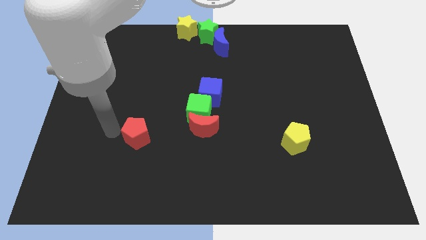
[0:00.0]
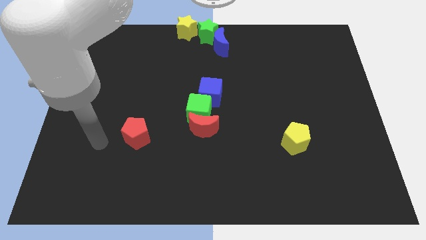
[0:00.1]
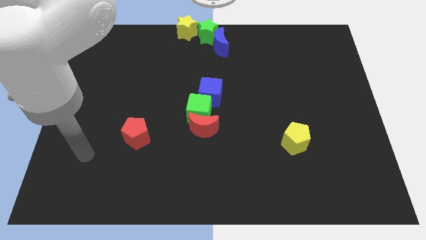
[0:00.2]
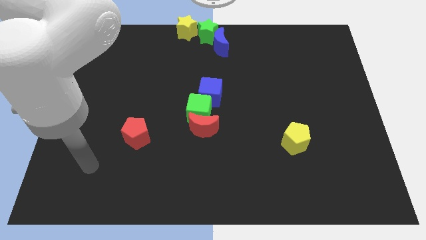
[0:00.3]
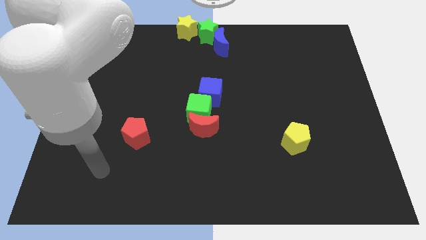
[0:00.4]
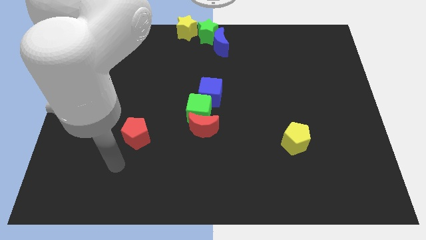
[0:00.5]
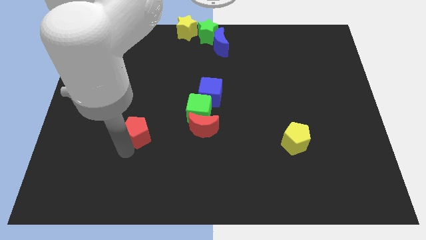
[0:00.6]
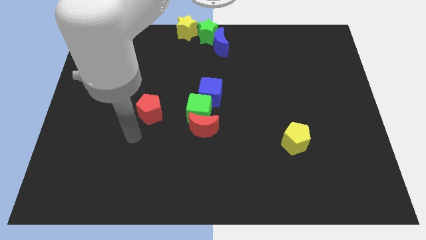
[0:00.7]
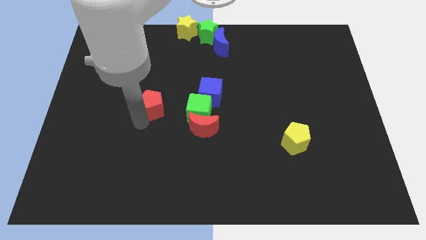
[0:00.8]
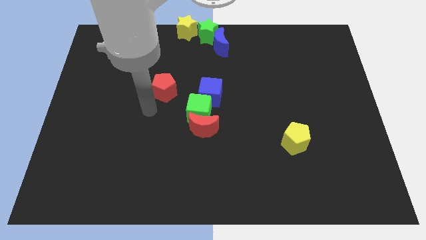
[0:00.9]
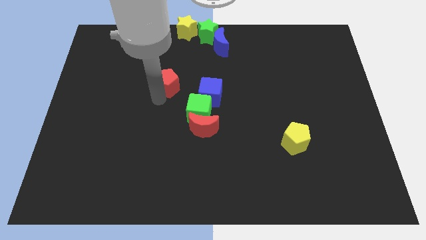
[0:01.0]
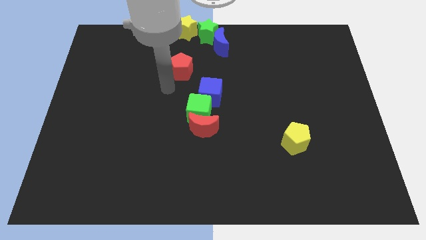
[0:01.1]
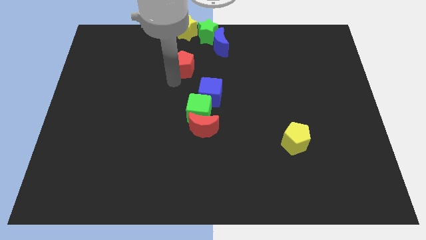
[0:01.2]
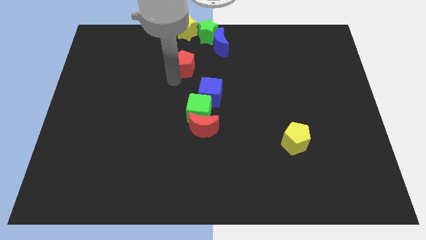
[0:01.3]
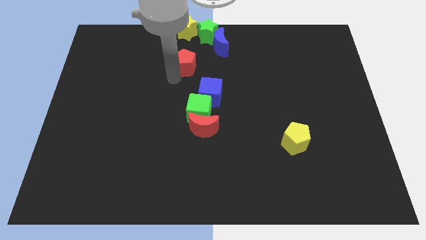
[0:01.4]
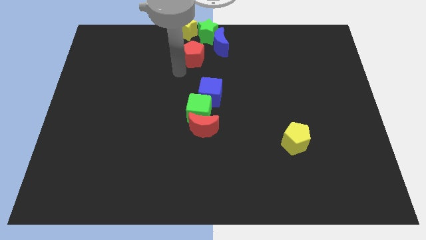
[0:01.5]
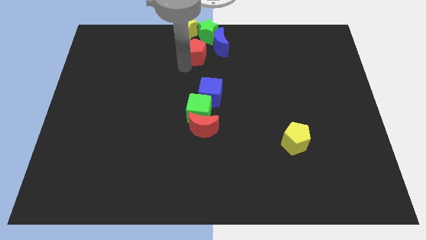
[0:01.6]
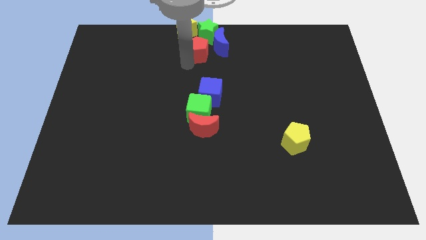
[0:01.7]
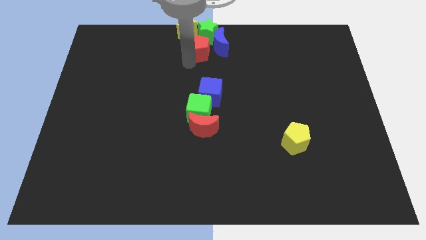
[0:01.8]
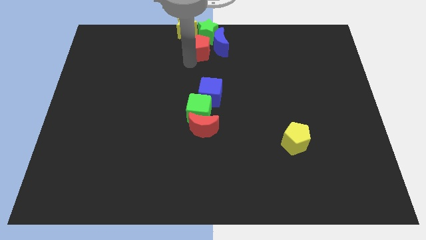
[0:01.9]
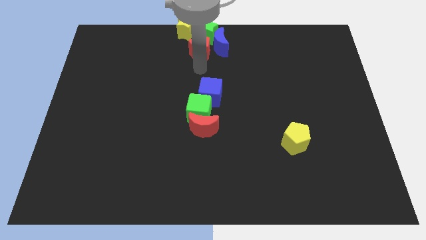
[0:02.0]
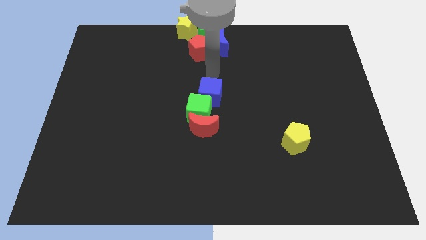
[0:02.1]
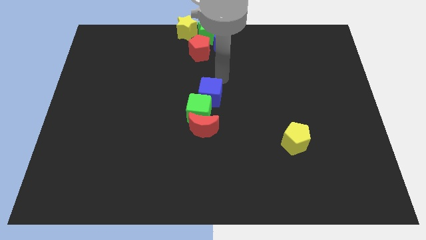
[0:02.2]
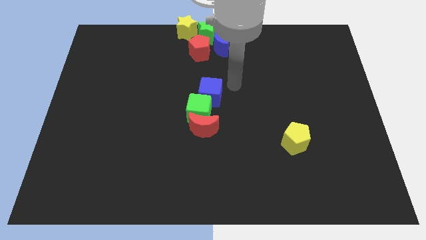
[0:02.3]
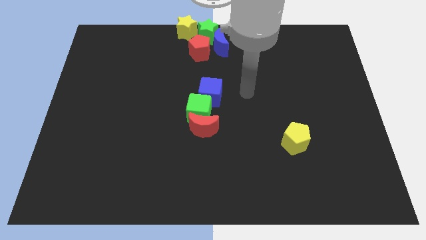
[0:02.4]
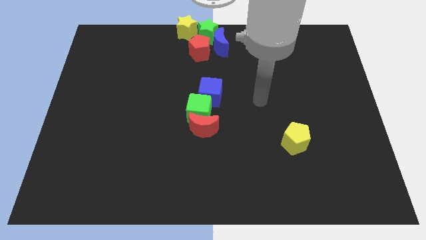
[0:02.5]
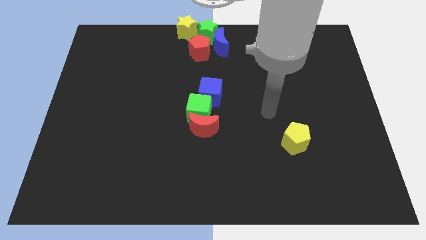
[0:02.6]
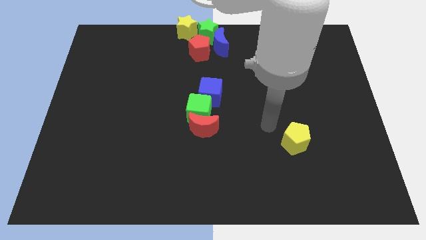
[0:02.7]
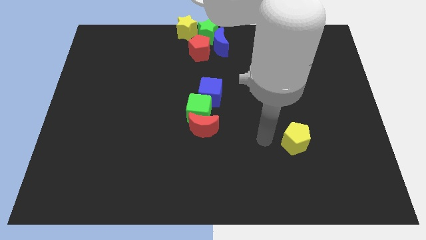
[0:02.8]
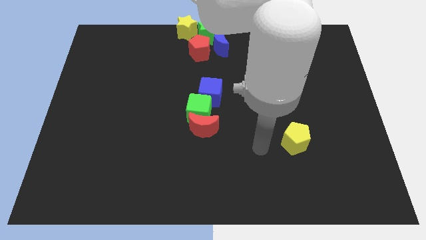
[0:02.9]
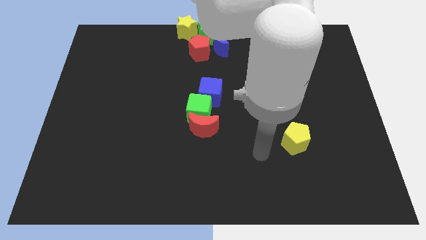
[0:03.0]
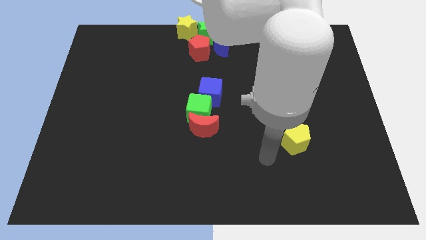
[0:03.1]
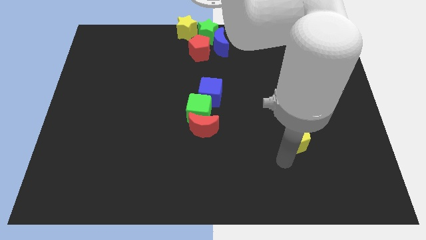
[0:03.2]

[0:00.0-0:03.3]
place the red pentagon vertically below the group of blocks

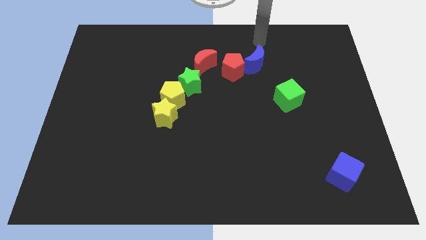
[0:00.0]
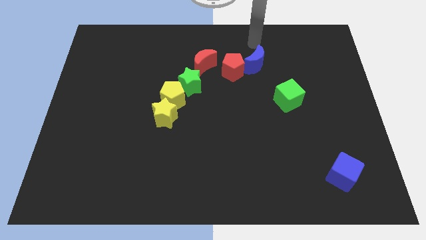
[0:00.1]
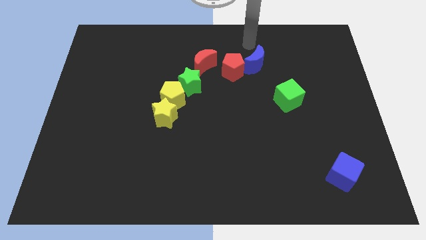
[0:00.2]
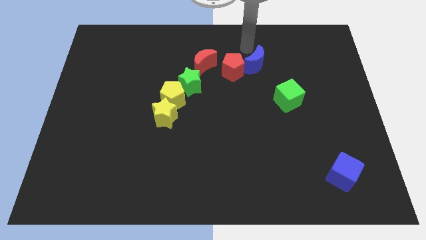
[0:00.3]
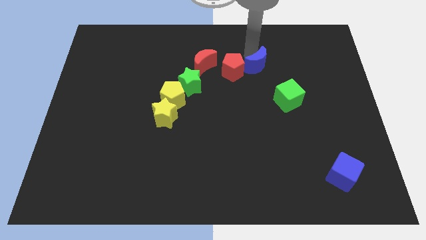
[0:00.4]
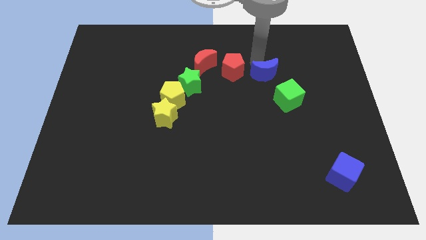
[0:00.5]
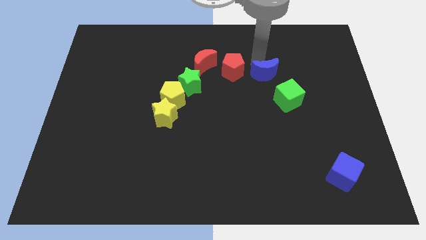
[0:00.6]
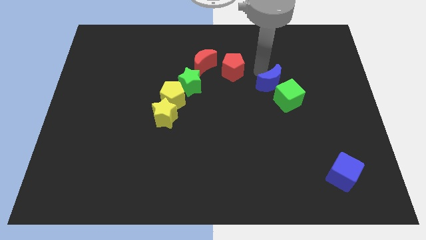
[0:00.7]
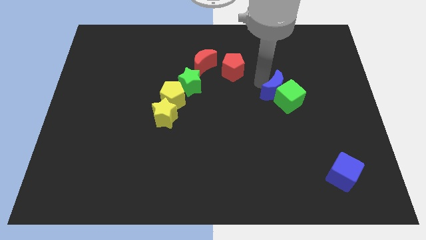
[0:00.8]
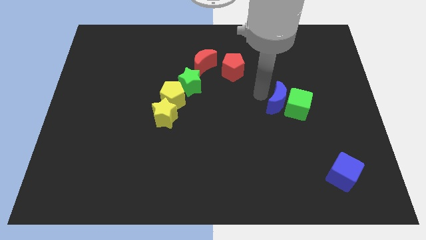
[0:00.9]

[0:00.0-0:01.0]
push blue crescent into green cube

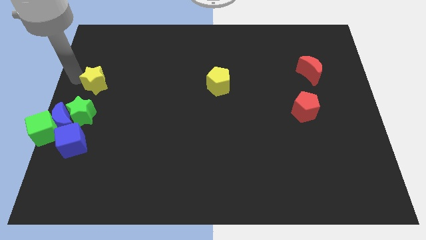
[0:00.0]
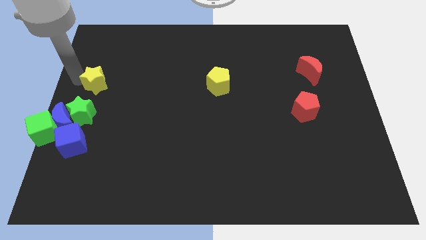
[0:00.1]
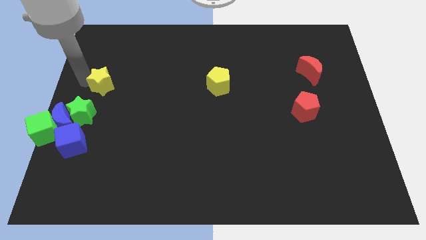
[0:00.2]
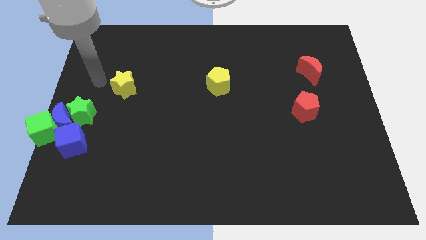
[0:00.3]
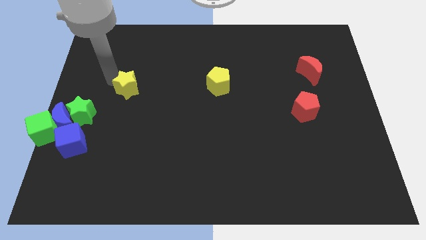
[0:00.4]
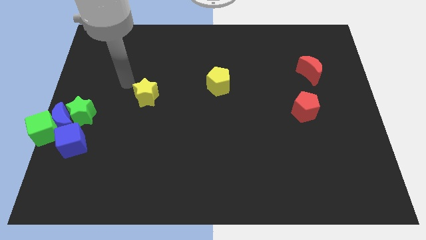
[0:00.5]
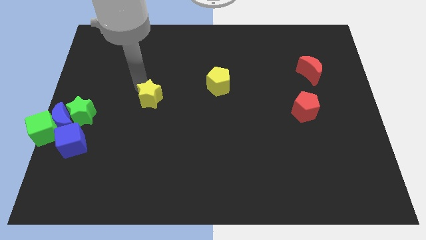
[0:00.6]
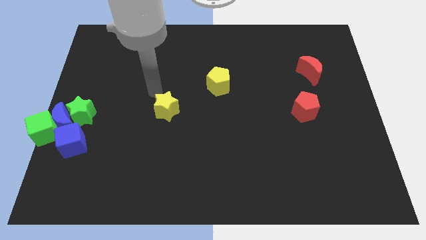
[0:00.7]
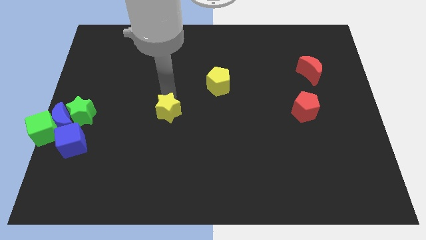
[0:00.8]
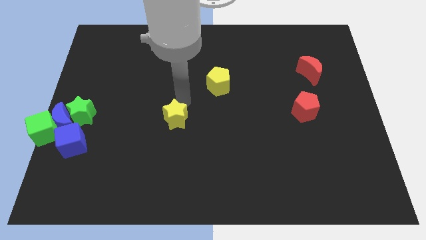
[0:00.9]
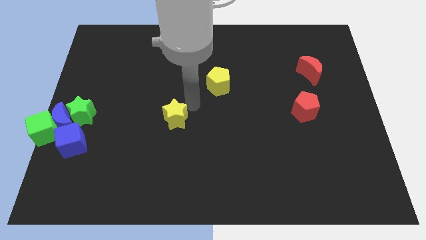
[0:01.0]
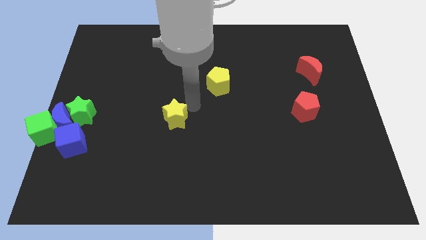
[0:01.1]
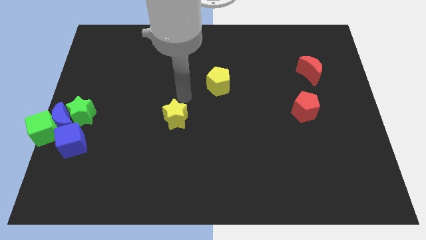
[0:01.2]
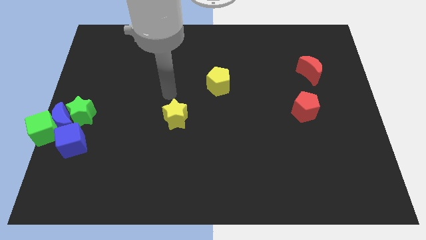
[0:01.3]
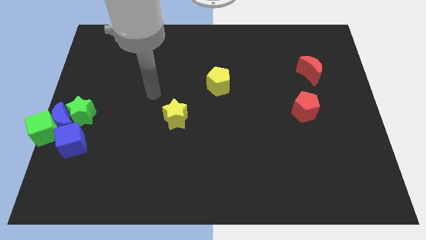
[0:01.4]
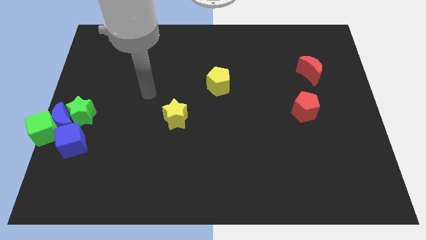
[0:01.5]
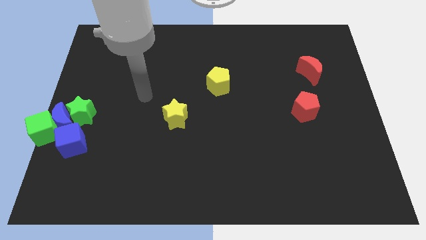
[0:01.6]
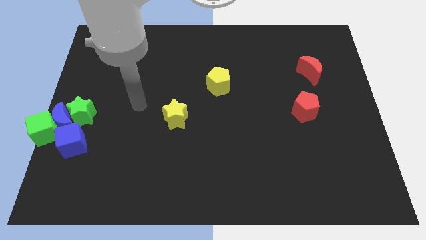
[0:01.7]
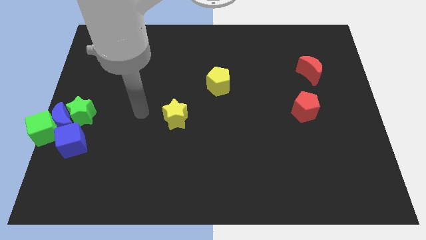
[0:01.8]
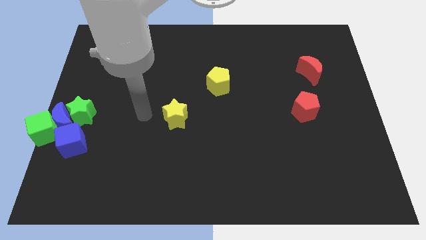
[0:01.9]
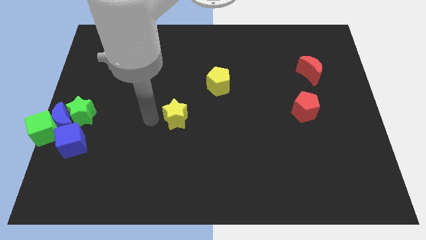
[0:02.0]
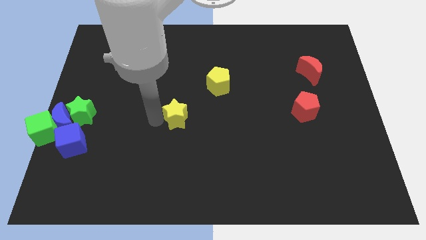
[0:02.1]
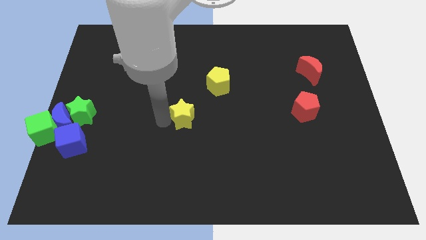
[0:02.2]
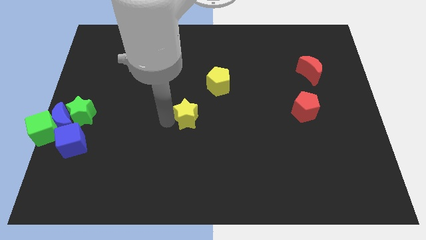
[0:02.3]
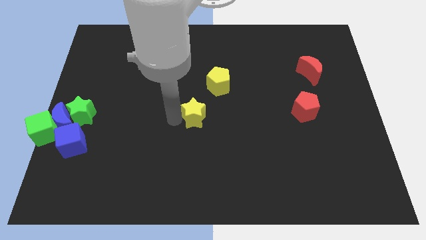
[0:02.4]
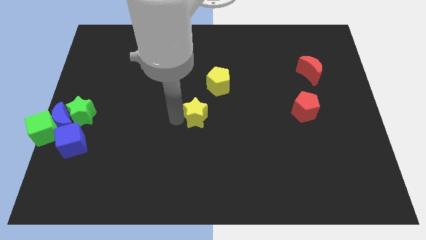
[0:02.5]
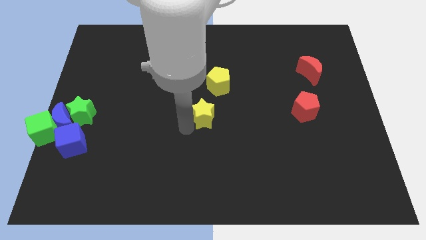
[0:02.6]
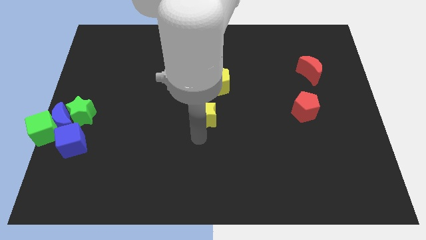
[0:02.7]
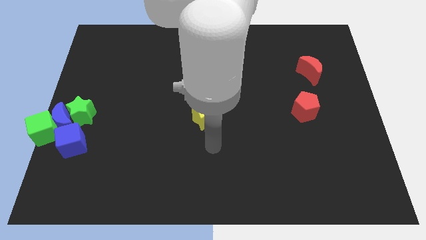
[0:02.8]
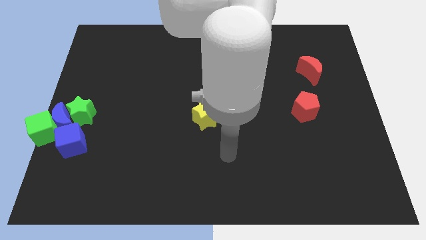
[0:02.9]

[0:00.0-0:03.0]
place the yellow star diagonally below the yellow pentagon

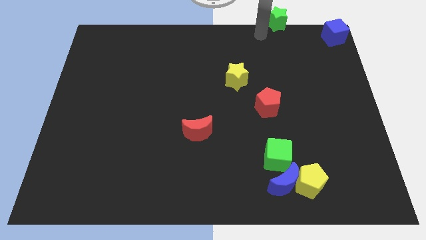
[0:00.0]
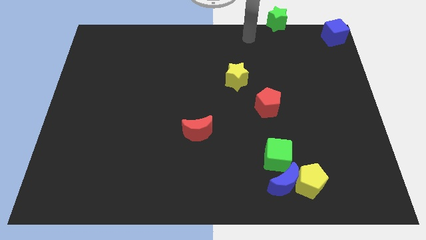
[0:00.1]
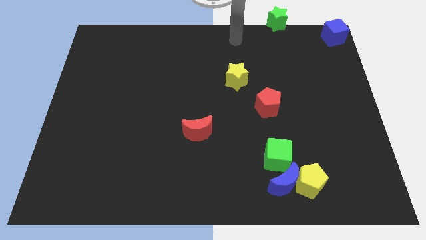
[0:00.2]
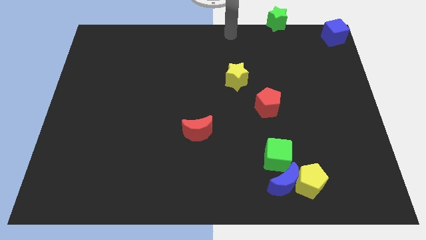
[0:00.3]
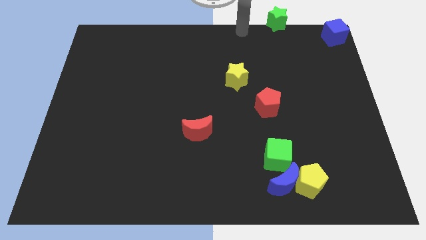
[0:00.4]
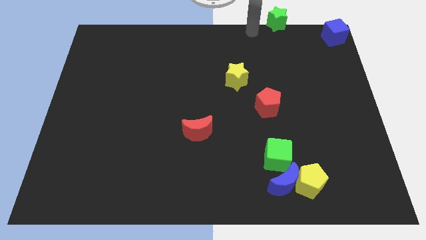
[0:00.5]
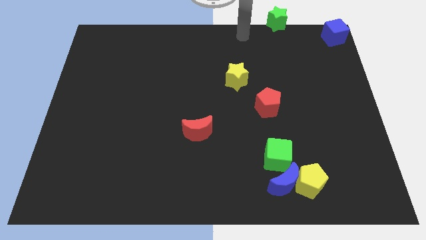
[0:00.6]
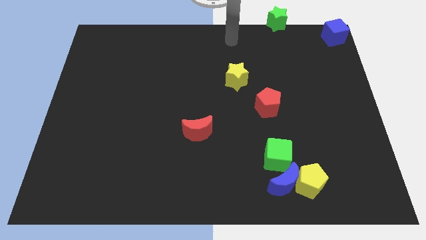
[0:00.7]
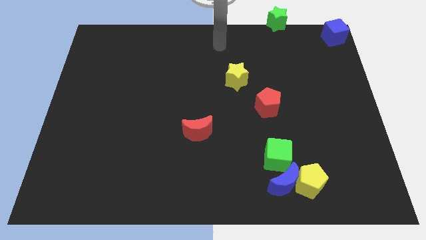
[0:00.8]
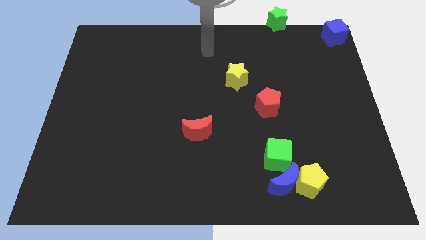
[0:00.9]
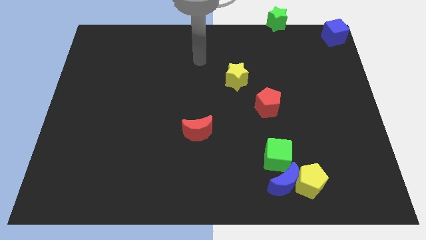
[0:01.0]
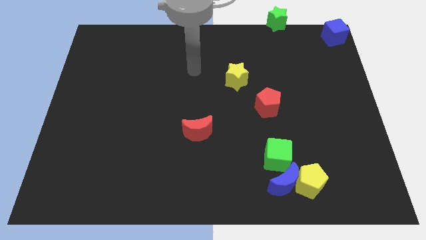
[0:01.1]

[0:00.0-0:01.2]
move the arm near yellow star

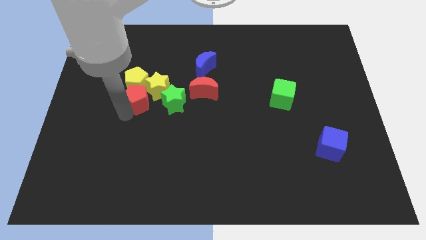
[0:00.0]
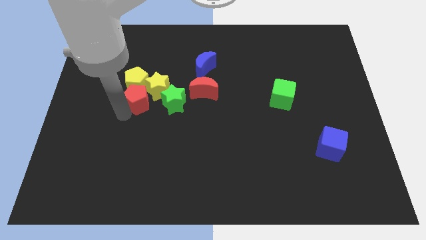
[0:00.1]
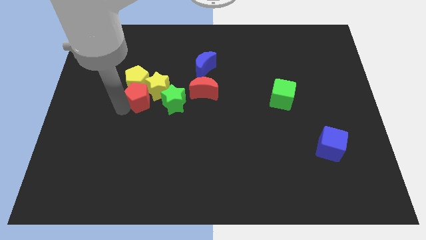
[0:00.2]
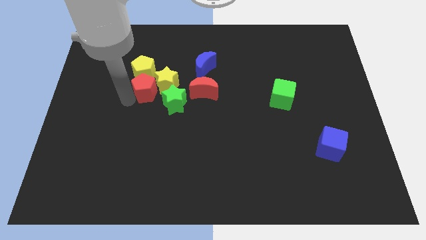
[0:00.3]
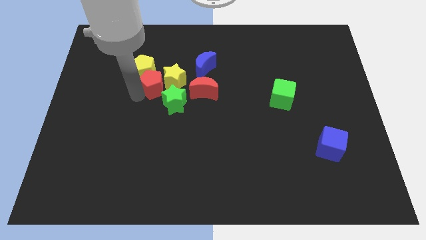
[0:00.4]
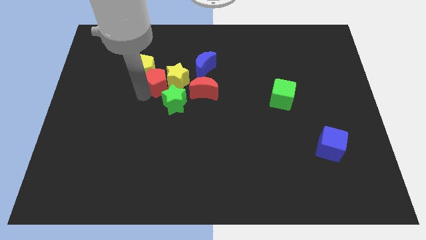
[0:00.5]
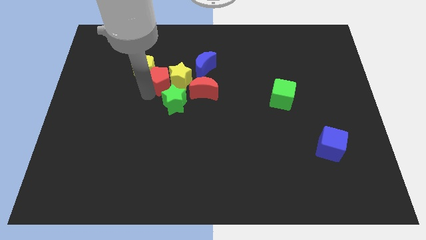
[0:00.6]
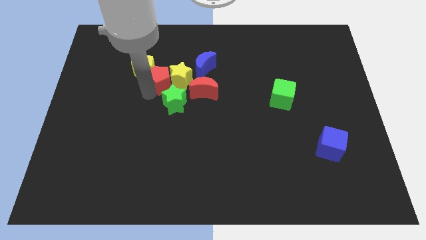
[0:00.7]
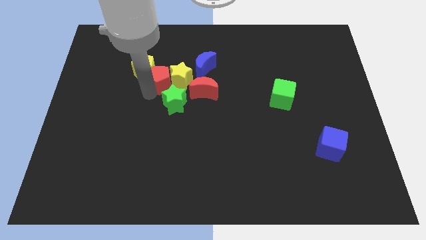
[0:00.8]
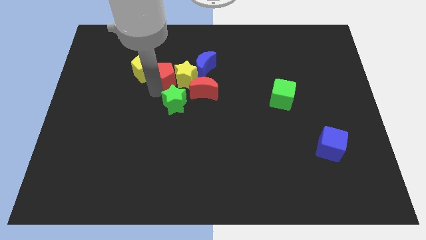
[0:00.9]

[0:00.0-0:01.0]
push the red pentagon into the yellow star
